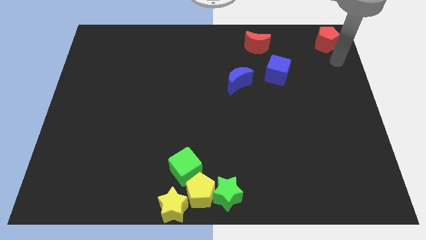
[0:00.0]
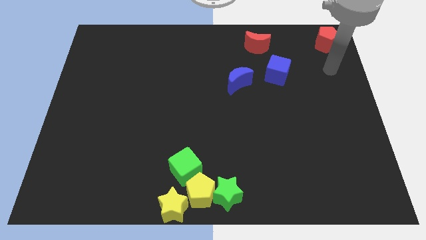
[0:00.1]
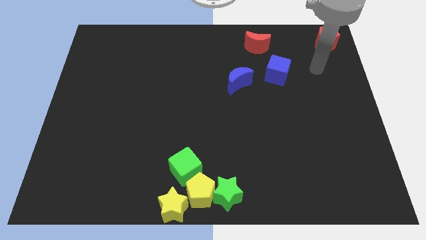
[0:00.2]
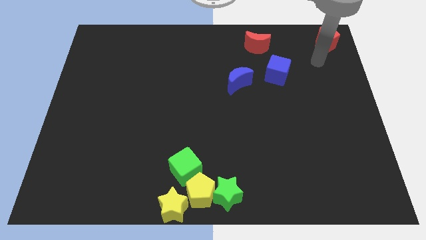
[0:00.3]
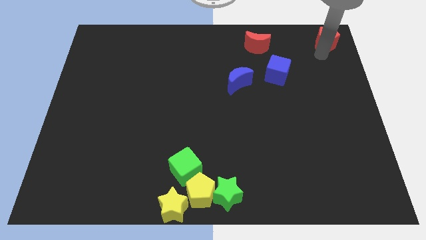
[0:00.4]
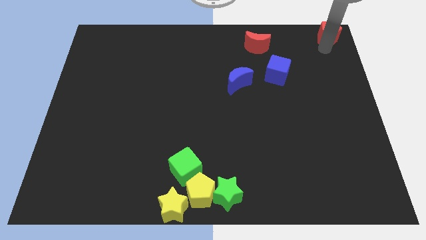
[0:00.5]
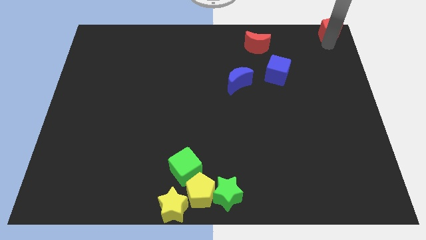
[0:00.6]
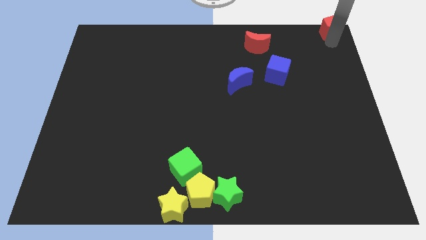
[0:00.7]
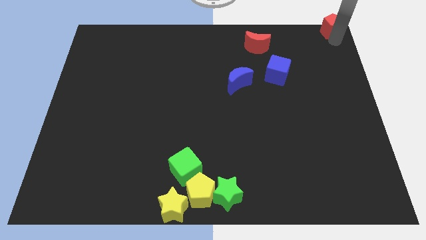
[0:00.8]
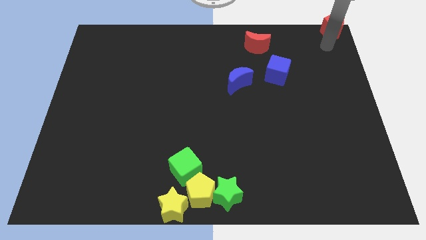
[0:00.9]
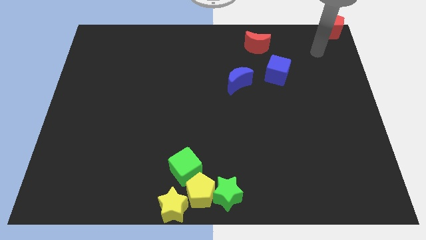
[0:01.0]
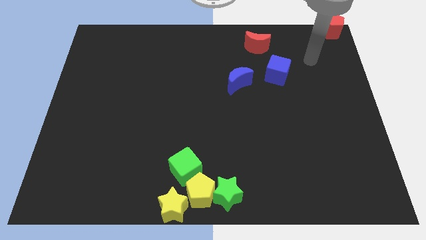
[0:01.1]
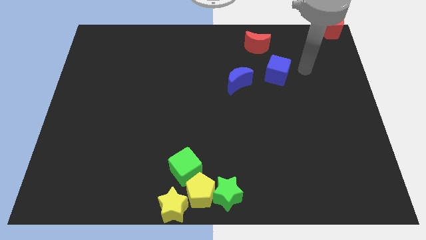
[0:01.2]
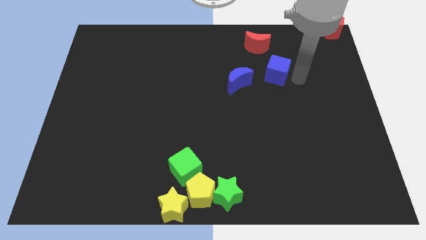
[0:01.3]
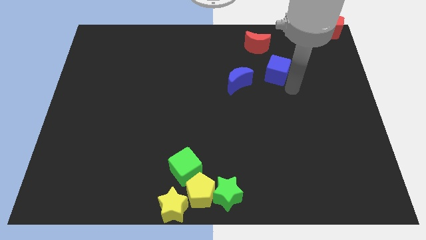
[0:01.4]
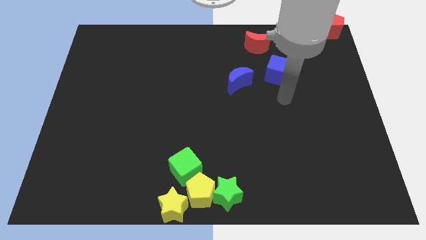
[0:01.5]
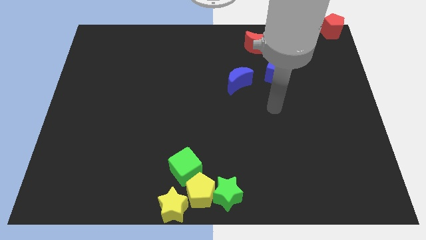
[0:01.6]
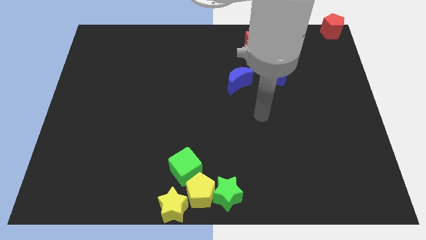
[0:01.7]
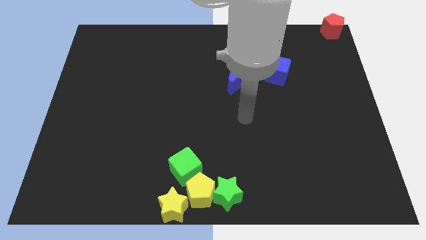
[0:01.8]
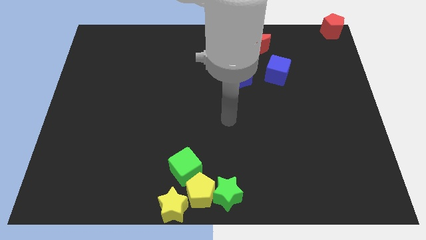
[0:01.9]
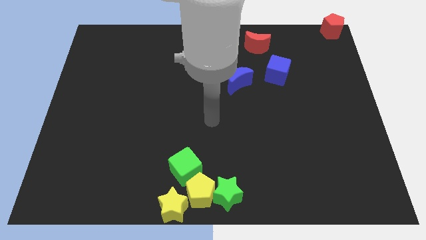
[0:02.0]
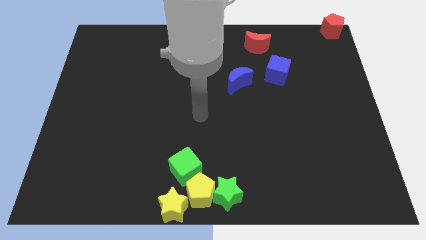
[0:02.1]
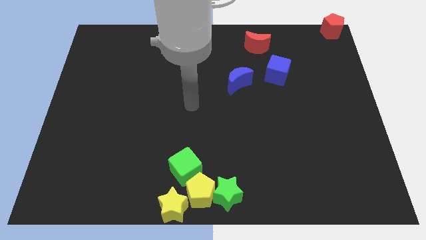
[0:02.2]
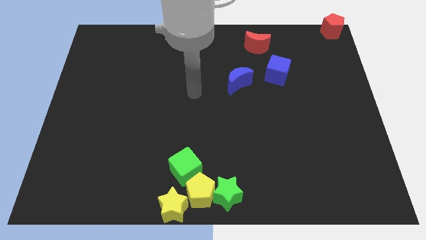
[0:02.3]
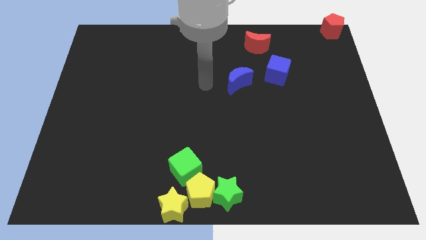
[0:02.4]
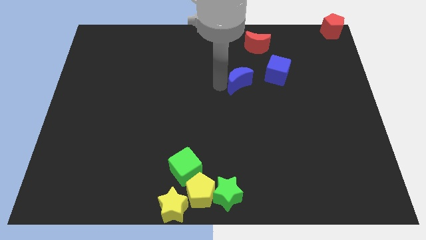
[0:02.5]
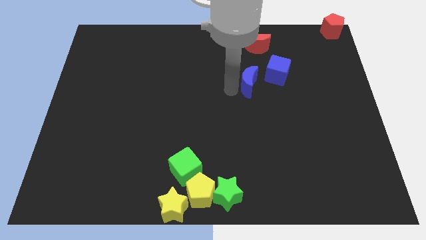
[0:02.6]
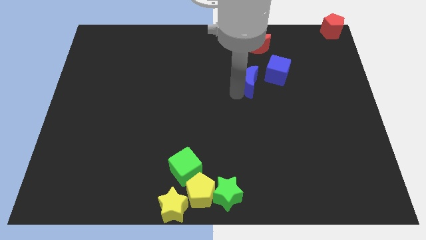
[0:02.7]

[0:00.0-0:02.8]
place the arm to the left of the blue moon

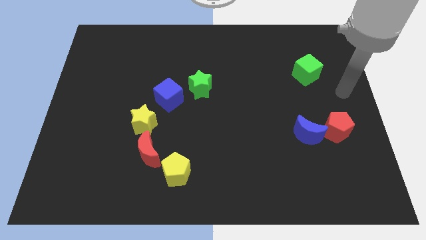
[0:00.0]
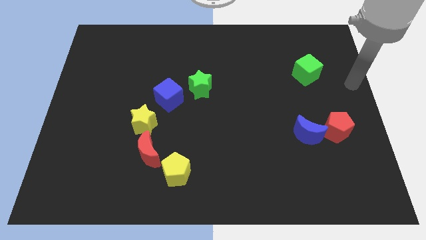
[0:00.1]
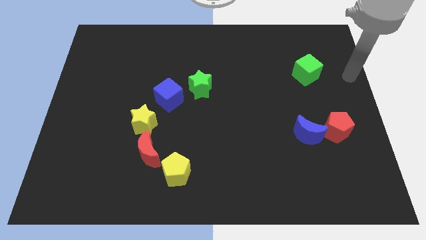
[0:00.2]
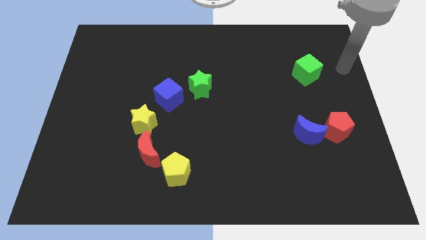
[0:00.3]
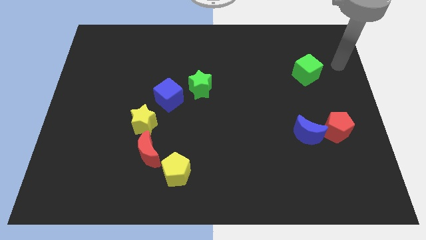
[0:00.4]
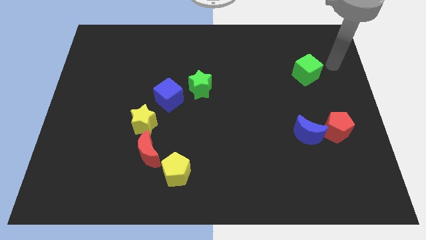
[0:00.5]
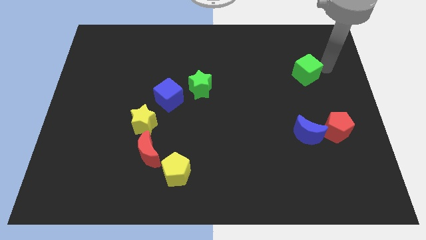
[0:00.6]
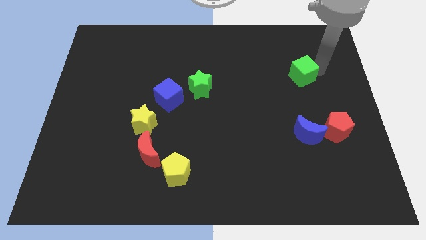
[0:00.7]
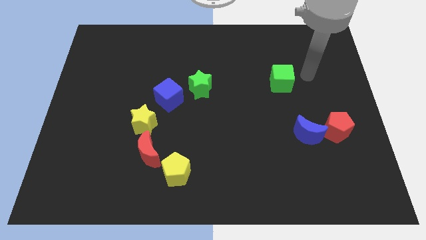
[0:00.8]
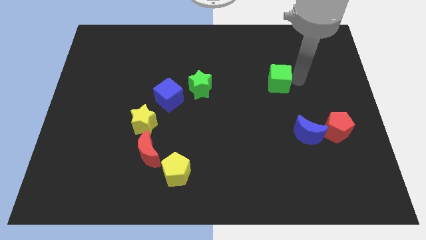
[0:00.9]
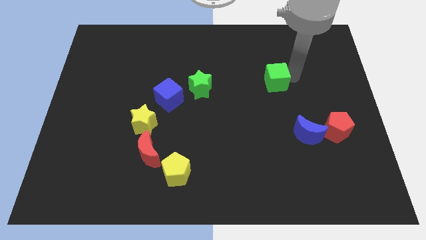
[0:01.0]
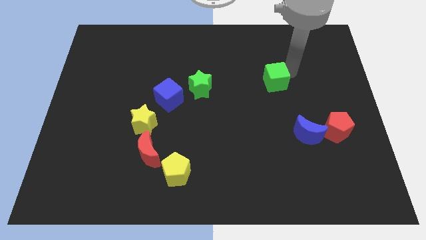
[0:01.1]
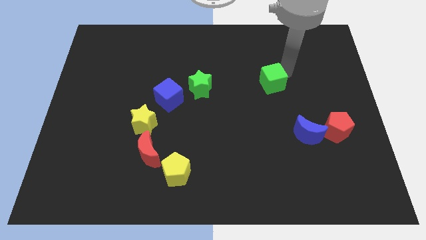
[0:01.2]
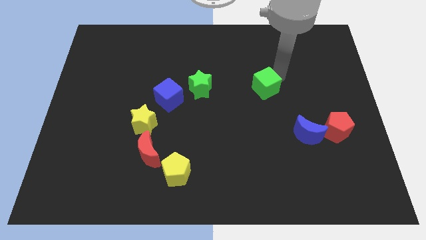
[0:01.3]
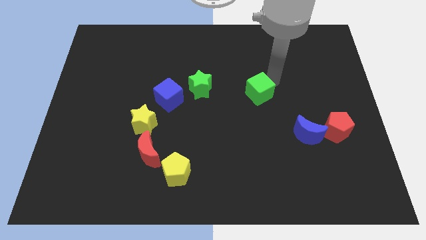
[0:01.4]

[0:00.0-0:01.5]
move the green cube towards the green star

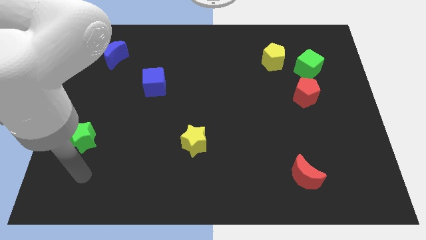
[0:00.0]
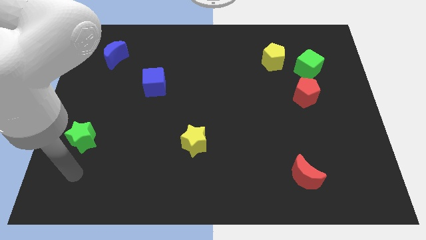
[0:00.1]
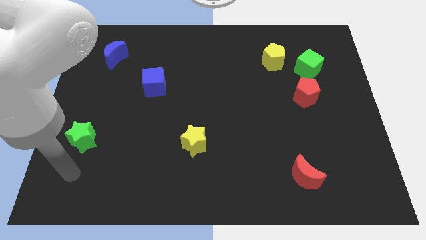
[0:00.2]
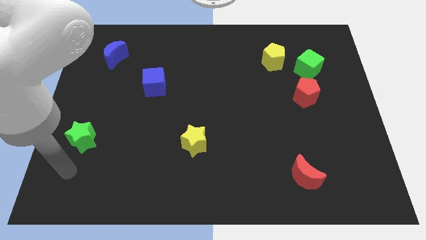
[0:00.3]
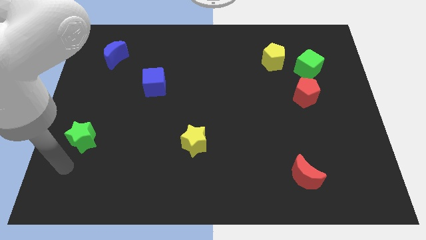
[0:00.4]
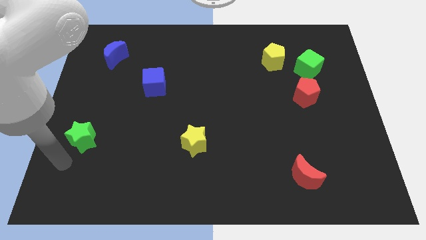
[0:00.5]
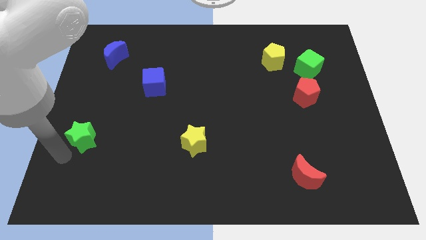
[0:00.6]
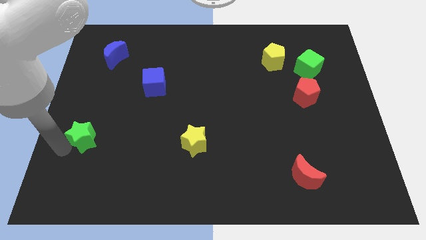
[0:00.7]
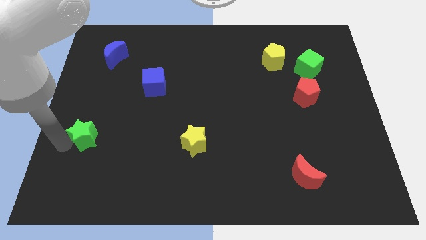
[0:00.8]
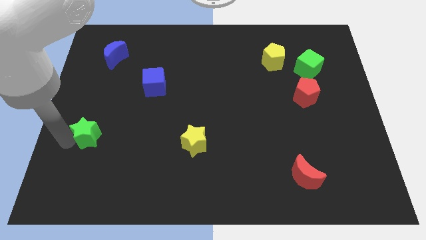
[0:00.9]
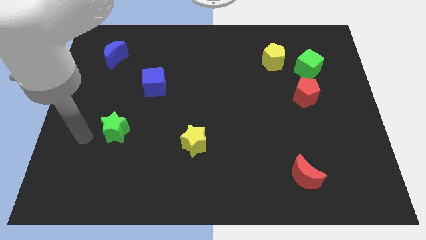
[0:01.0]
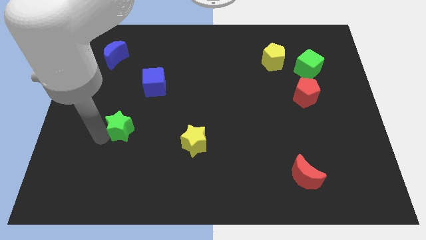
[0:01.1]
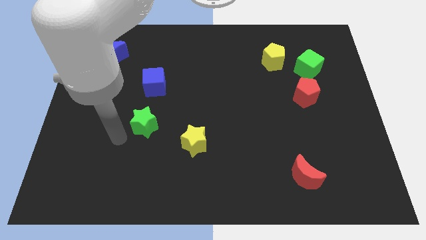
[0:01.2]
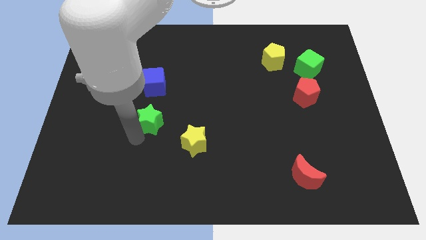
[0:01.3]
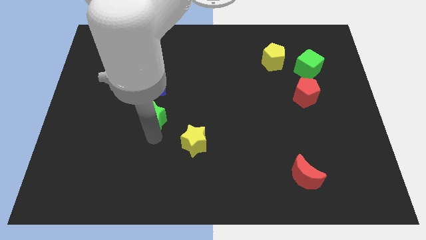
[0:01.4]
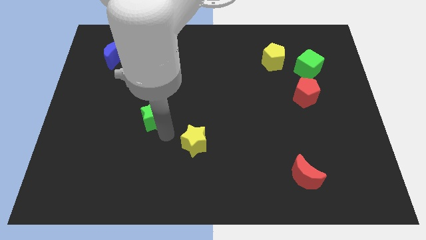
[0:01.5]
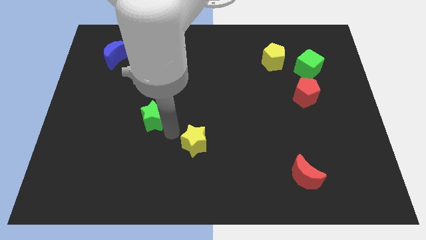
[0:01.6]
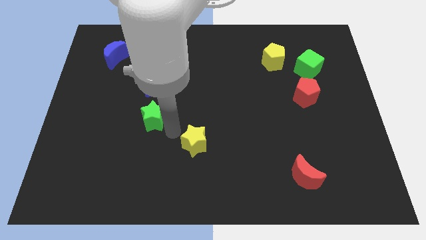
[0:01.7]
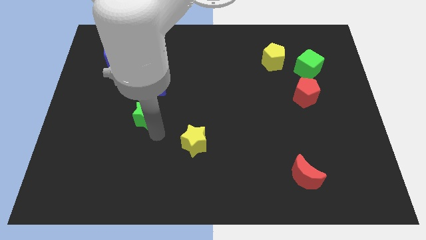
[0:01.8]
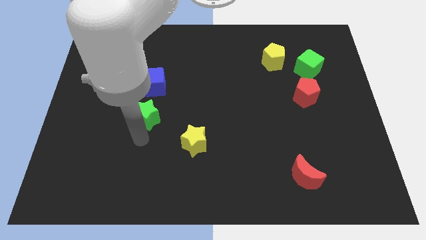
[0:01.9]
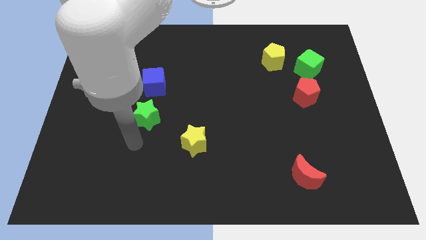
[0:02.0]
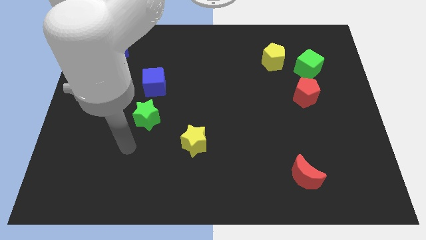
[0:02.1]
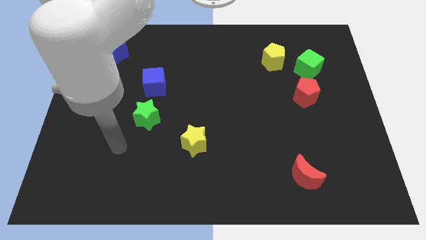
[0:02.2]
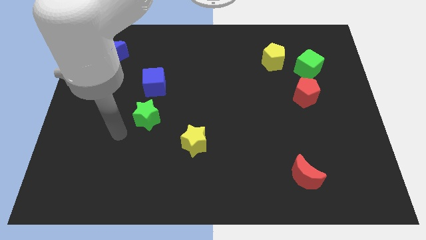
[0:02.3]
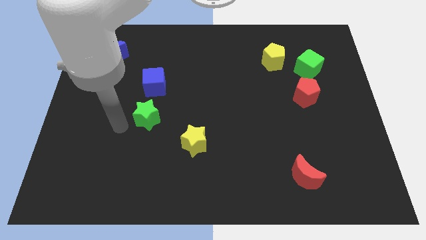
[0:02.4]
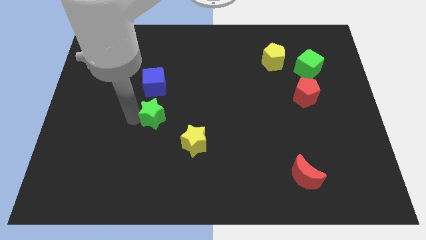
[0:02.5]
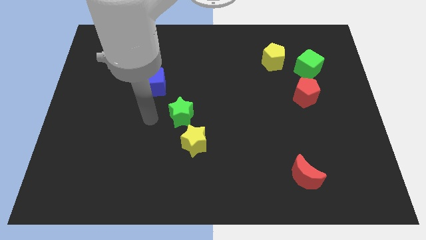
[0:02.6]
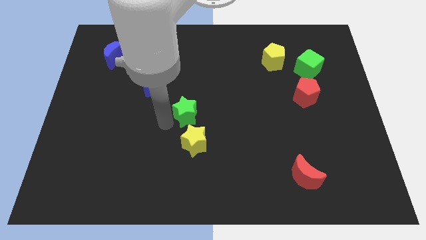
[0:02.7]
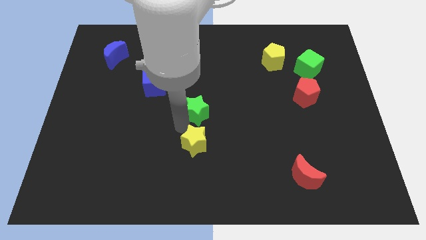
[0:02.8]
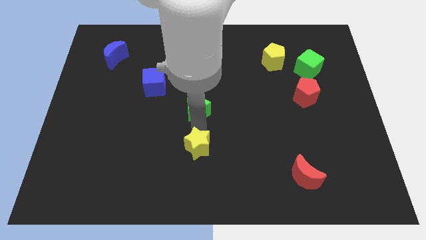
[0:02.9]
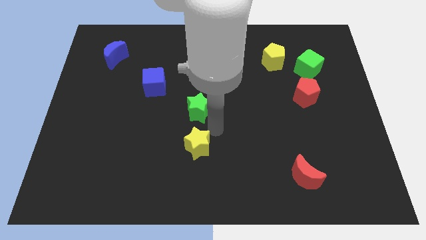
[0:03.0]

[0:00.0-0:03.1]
move green star above yellow star

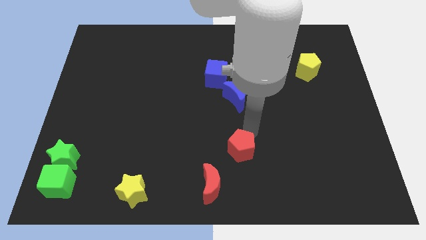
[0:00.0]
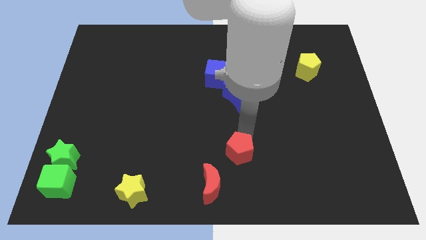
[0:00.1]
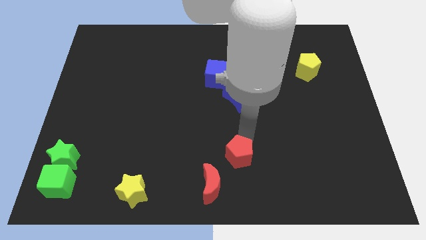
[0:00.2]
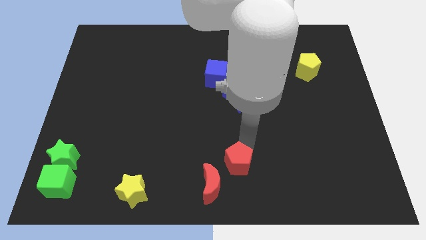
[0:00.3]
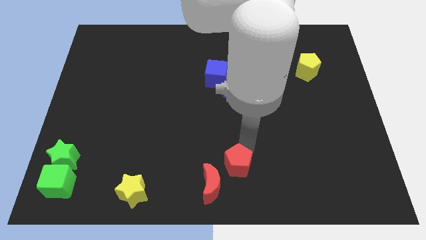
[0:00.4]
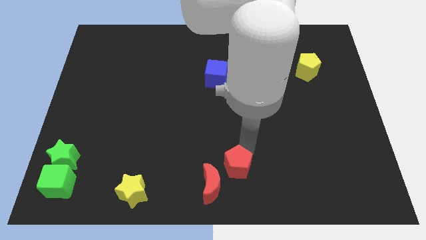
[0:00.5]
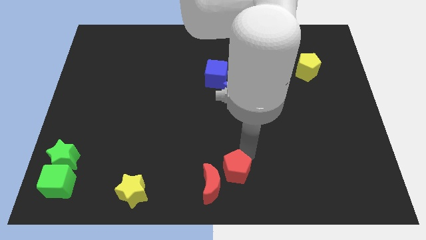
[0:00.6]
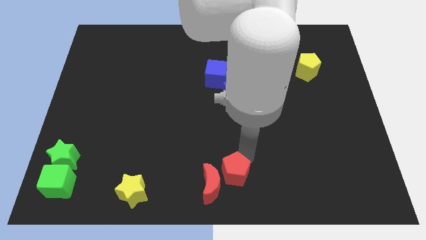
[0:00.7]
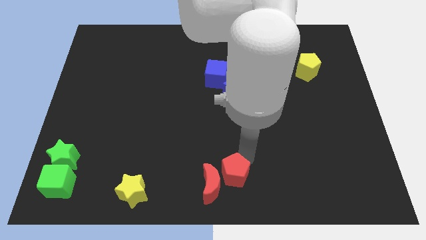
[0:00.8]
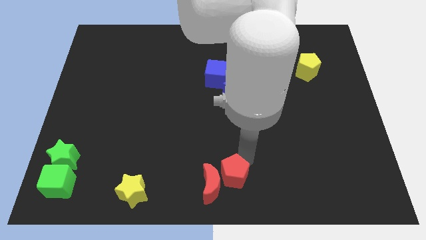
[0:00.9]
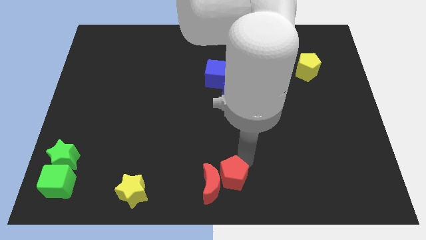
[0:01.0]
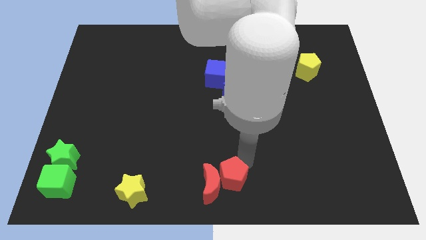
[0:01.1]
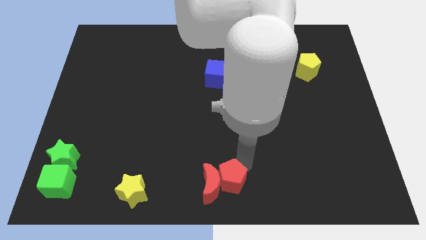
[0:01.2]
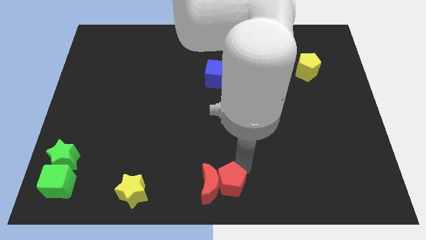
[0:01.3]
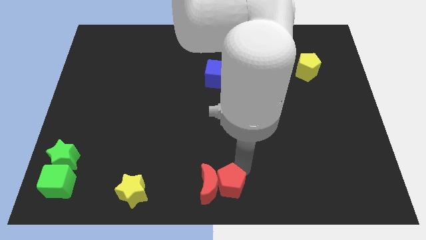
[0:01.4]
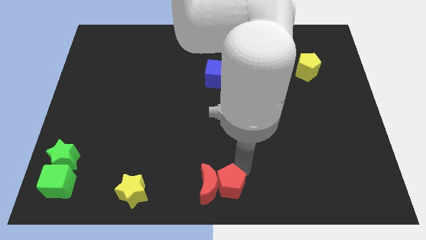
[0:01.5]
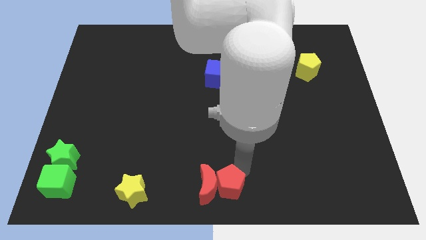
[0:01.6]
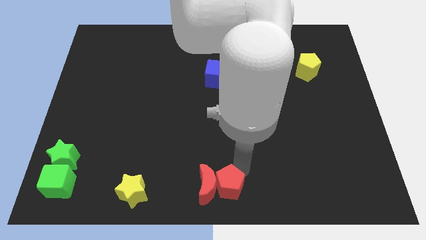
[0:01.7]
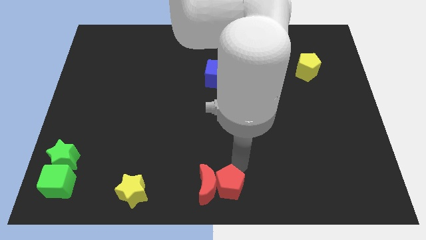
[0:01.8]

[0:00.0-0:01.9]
push the red pentagon to the right side of the red moon
